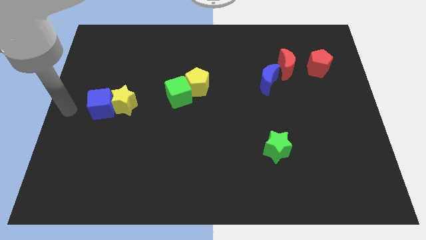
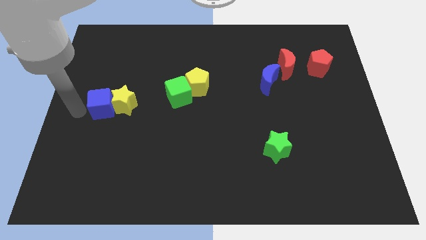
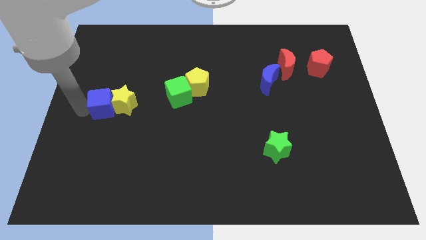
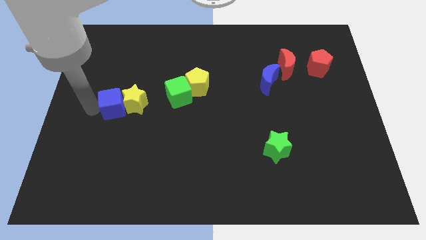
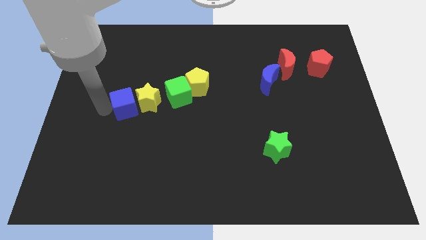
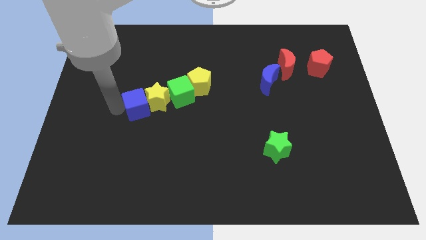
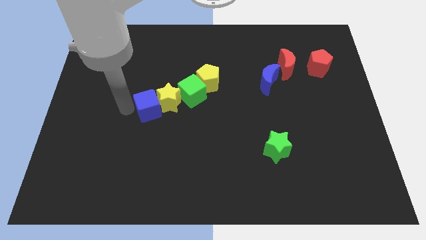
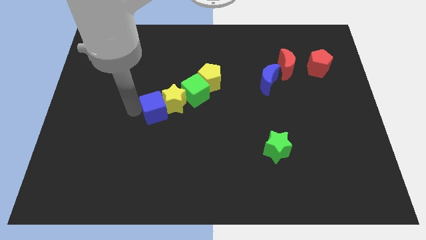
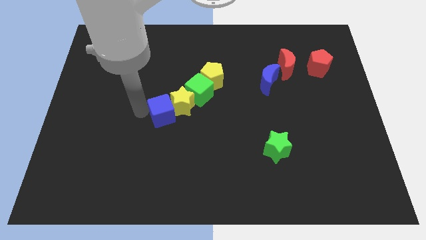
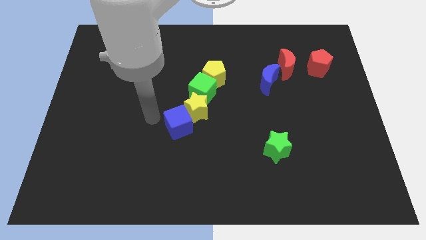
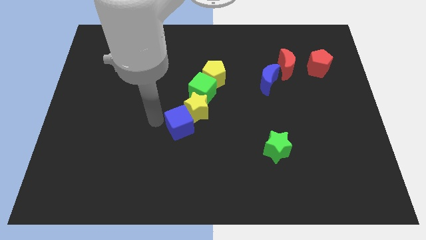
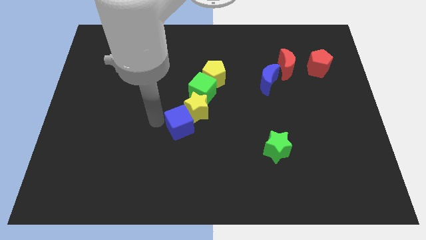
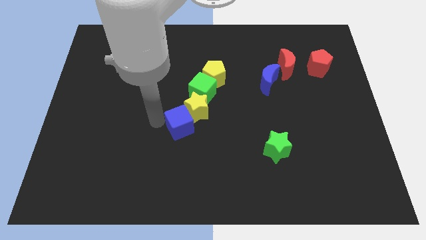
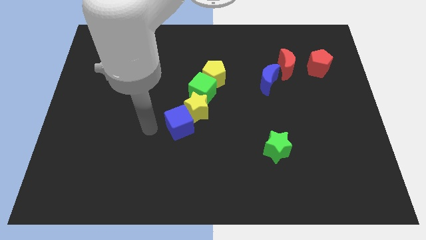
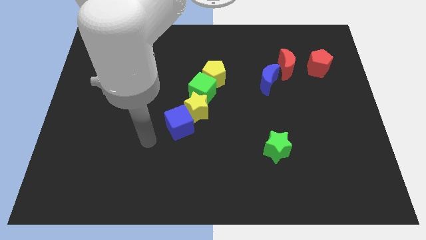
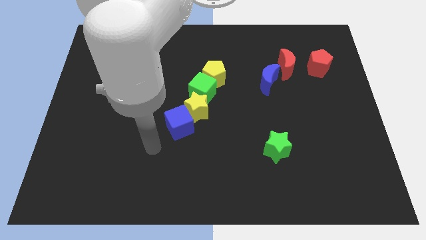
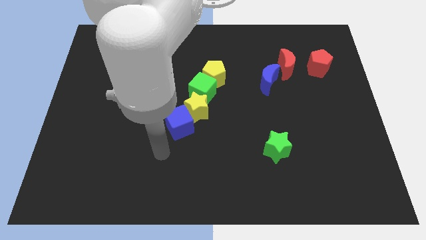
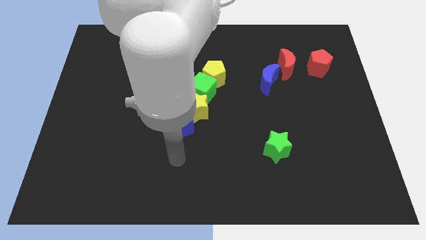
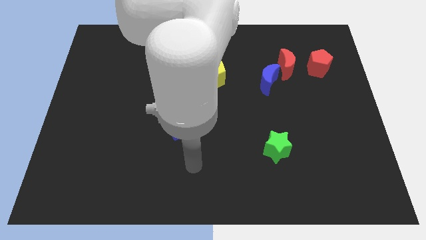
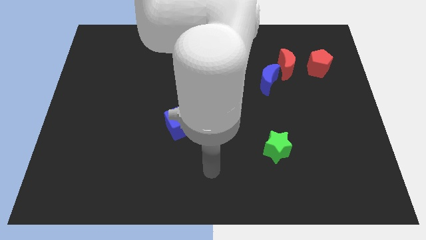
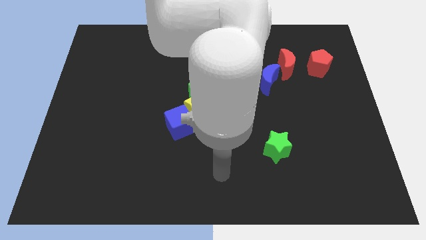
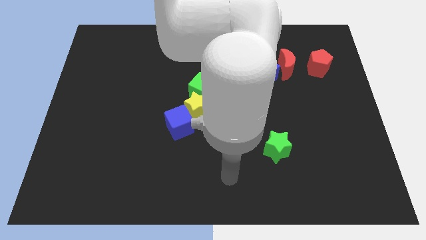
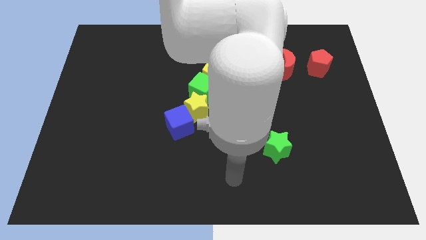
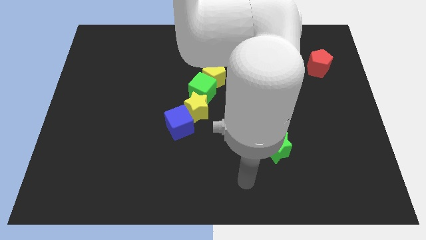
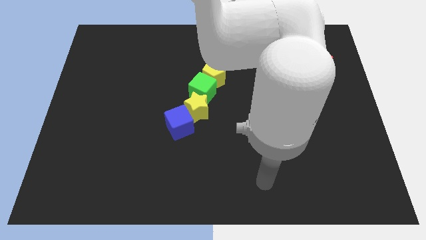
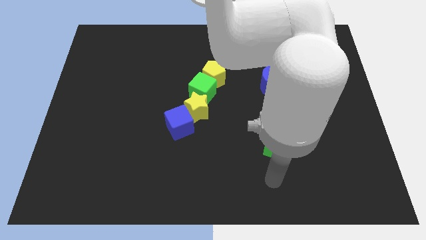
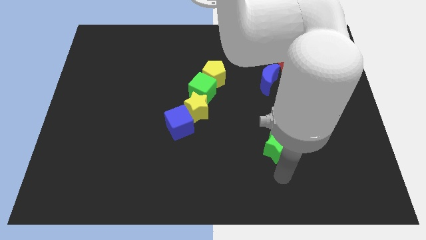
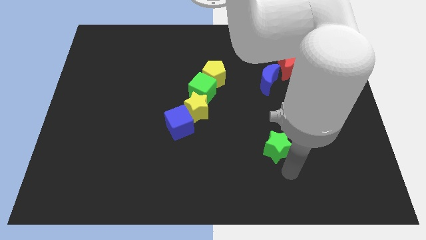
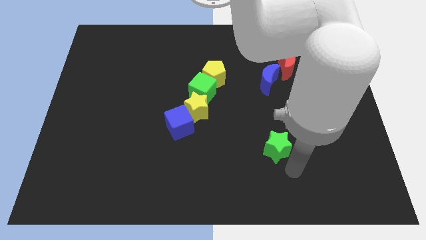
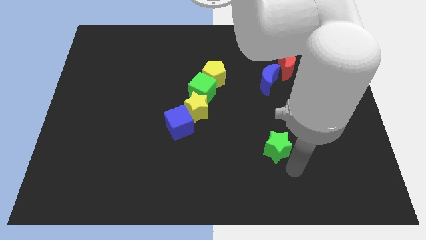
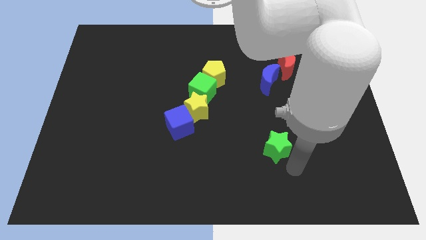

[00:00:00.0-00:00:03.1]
move the yellow star and blue cube to the center

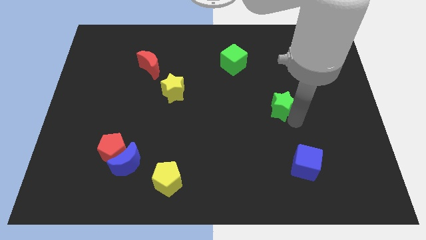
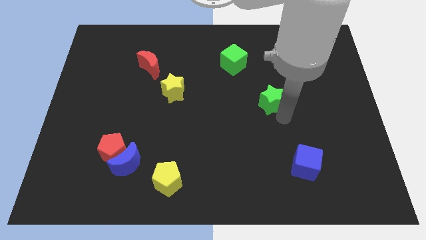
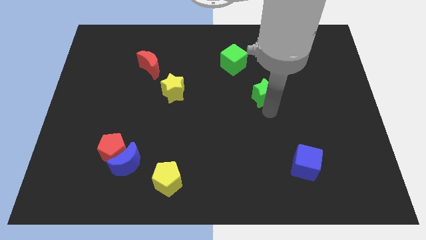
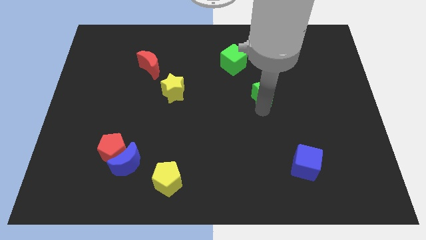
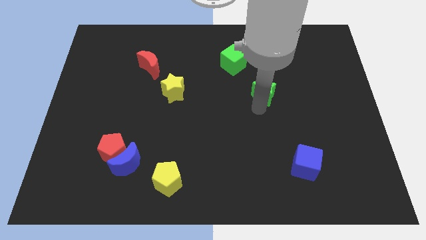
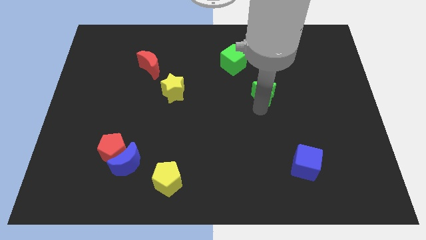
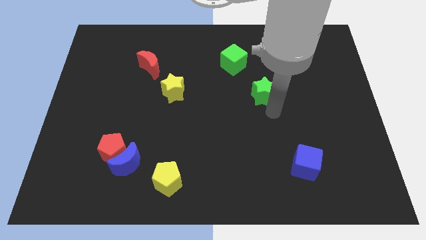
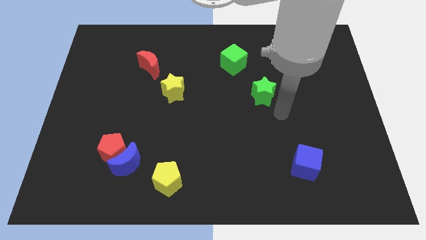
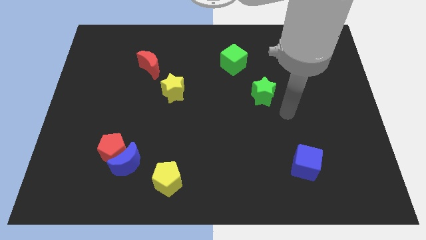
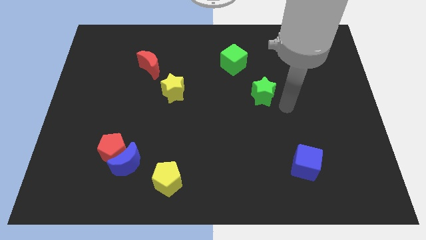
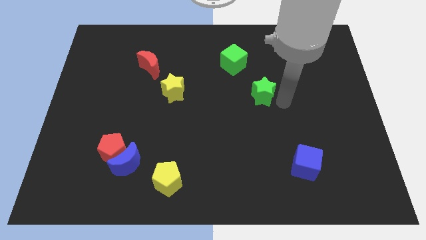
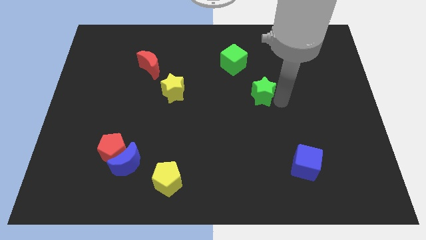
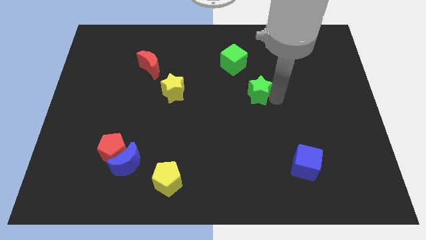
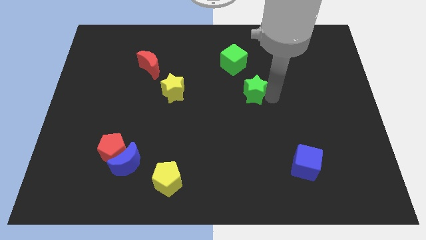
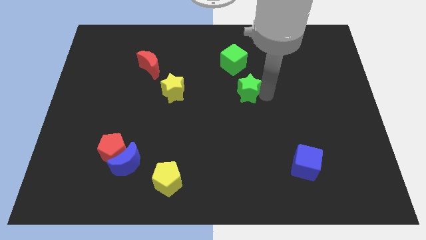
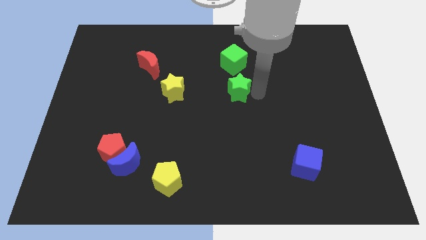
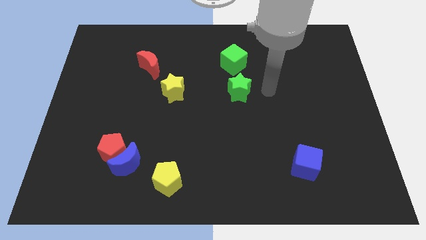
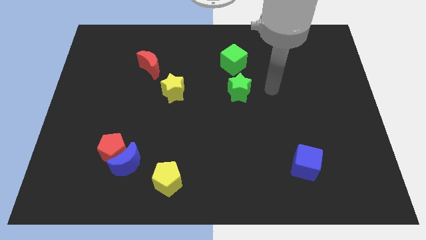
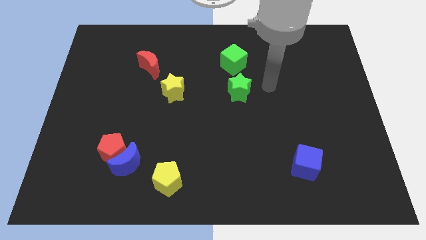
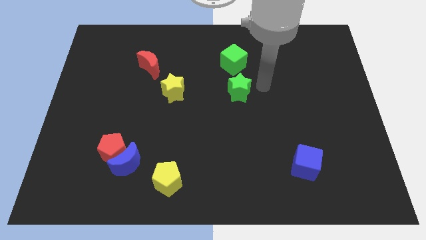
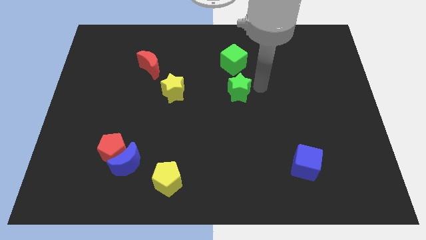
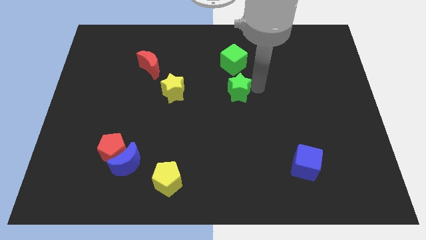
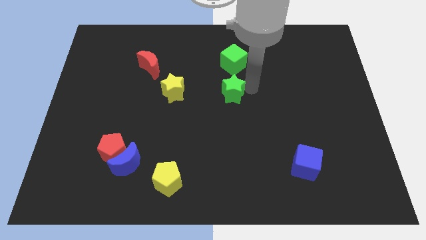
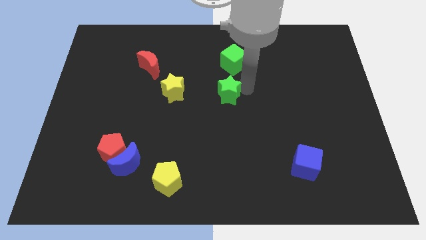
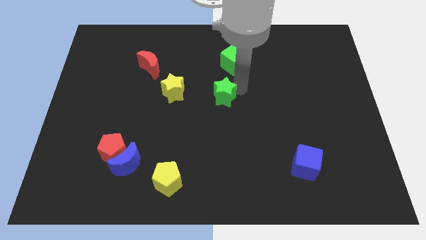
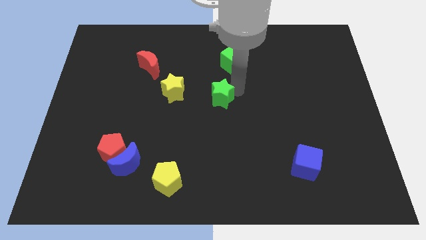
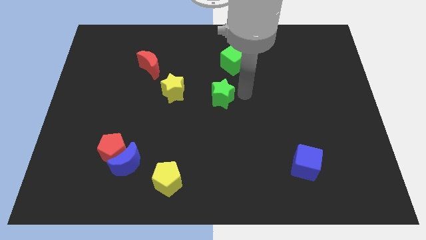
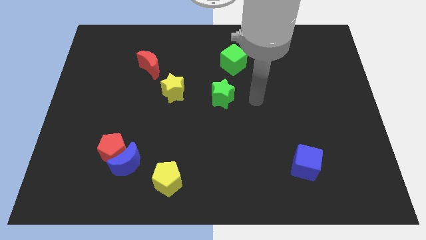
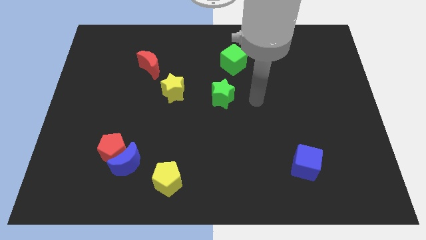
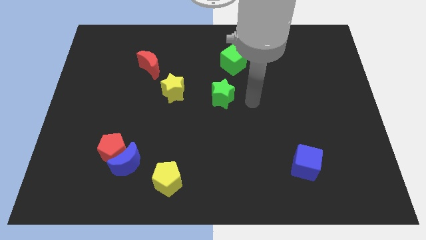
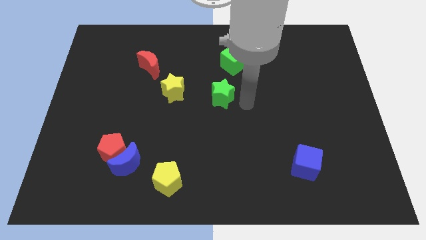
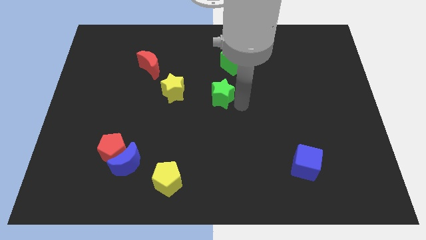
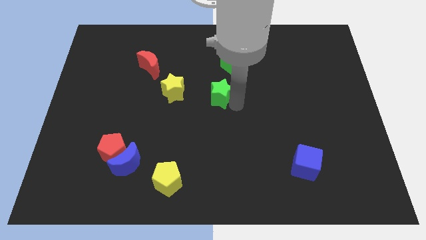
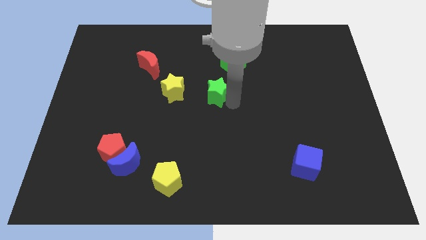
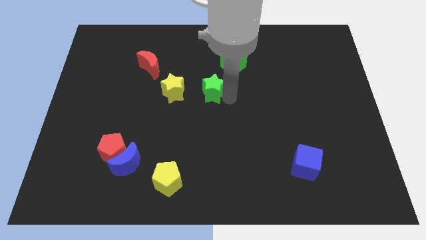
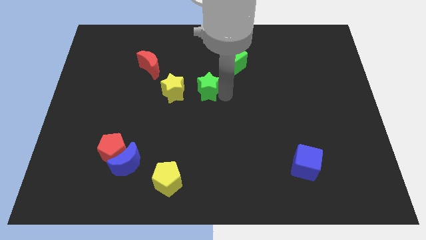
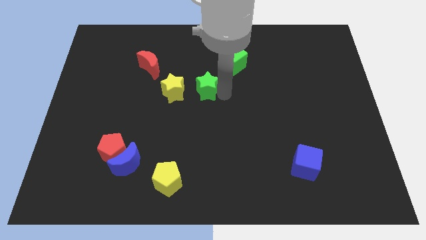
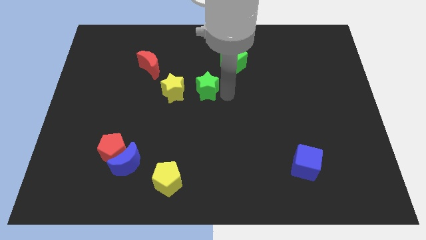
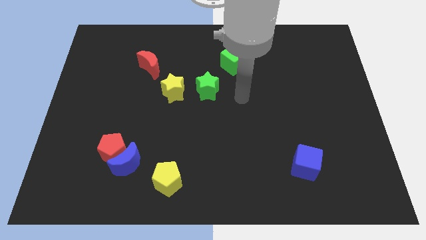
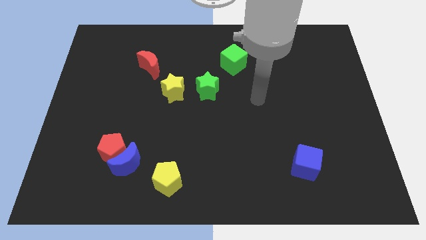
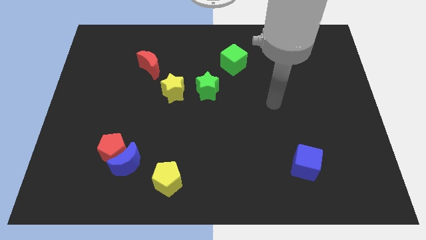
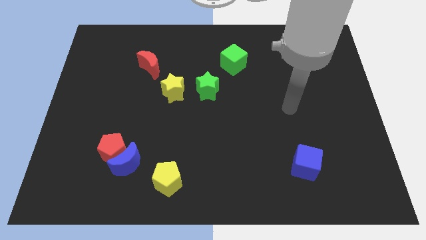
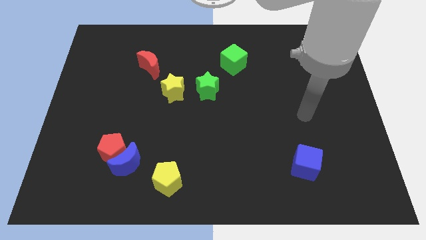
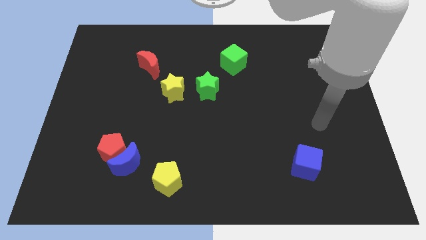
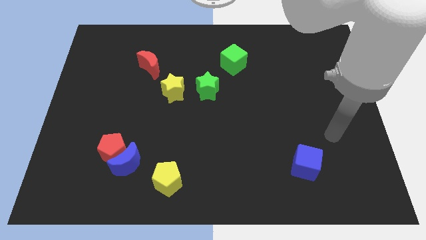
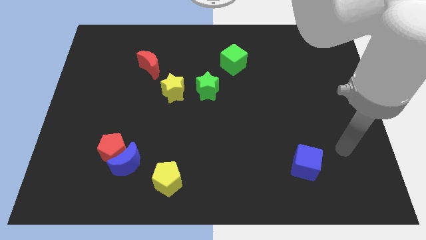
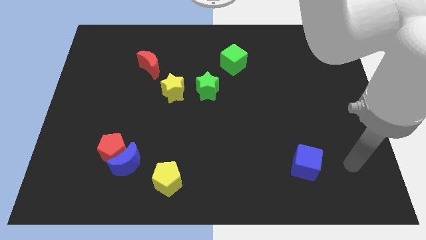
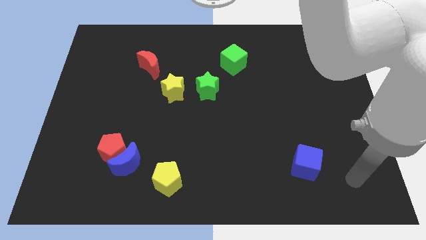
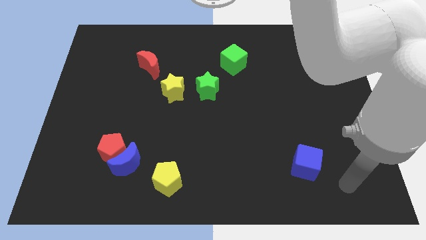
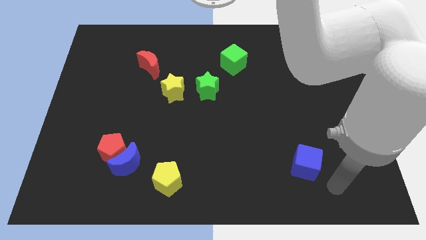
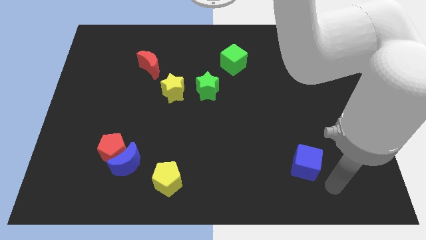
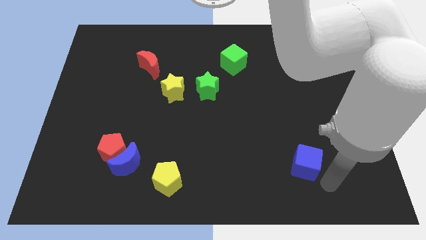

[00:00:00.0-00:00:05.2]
place the green star to the right side of the yellow star

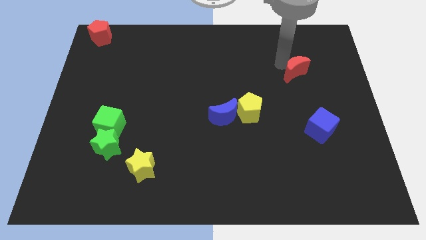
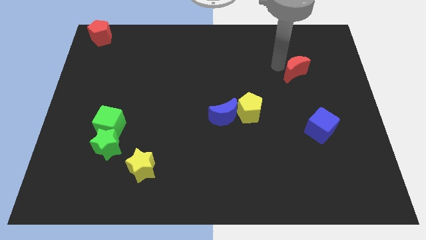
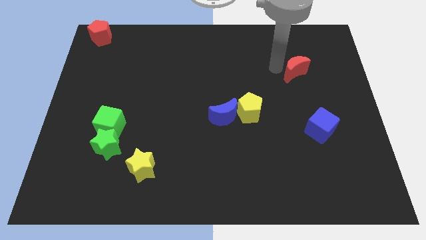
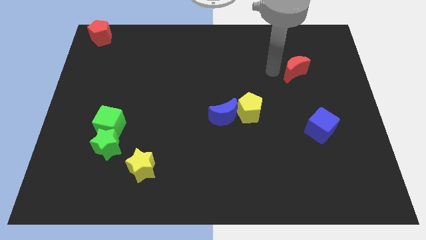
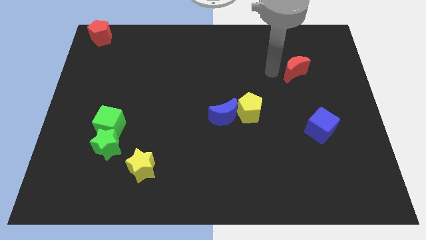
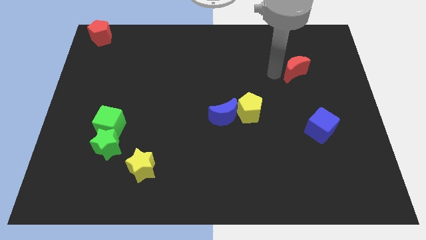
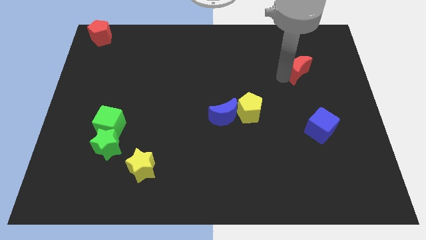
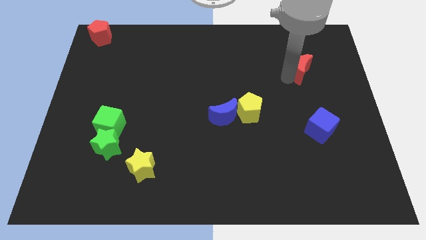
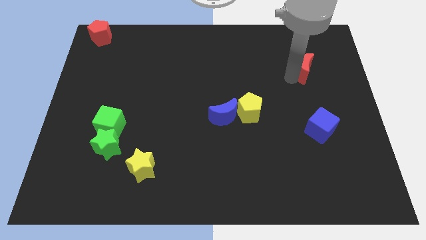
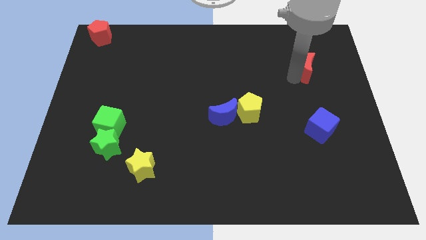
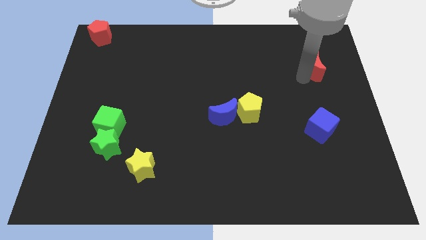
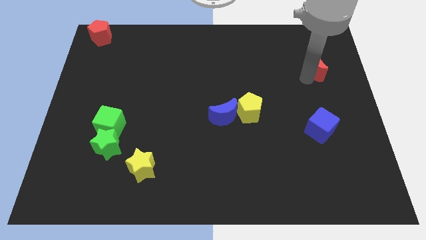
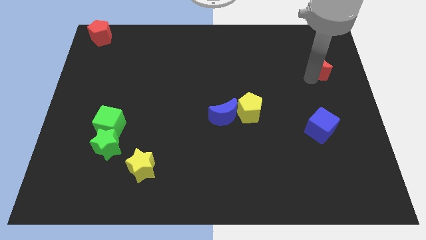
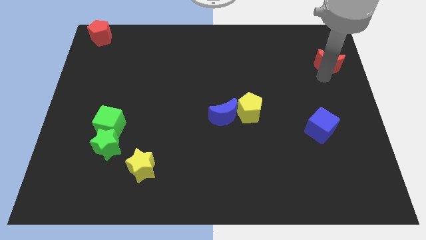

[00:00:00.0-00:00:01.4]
push the red crescent to the top of the blue cube
